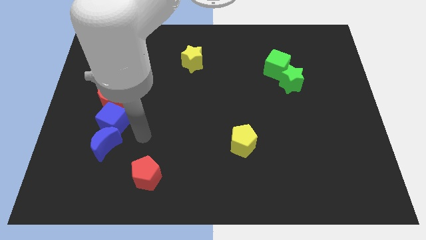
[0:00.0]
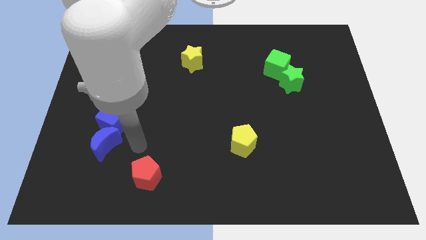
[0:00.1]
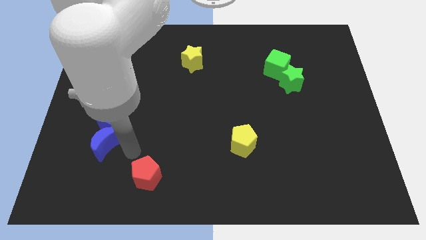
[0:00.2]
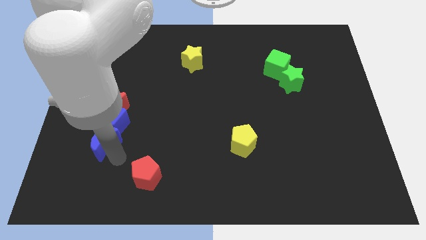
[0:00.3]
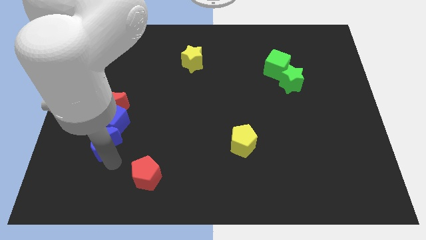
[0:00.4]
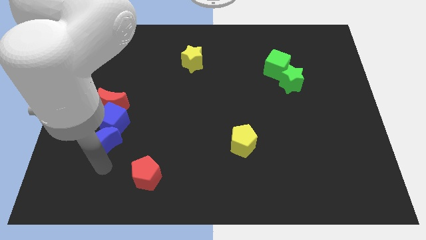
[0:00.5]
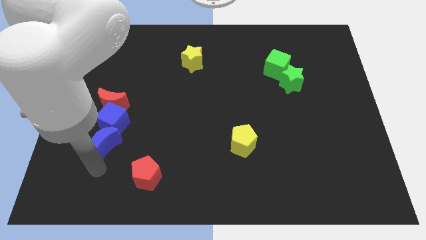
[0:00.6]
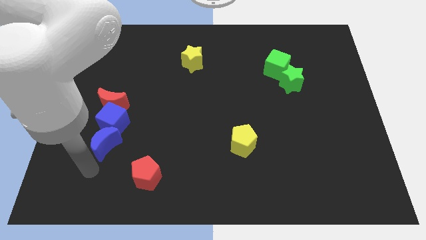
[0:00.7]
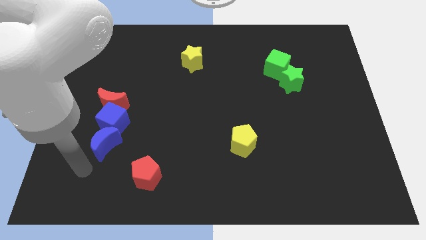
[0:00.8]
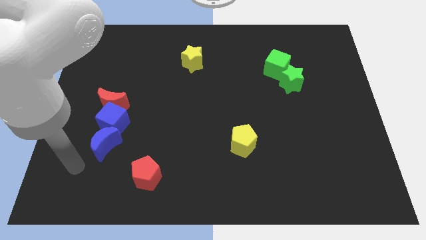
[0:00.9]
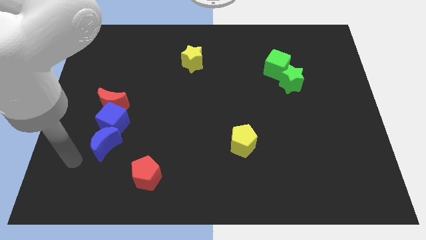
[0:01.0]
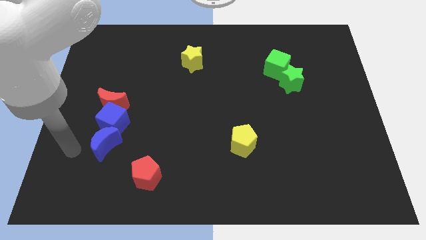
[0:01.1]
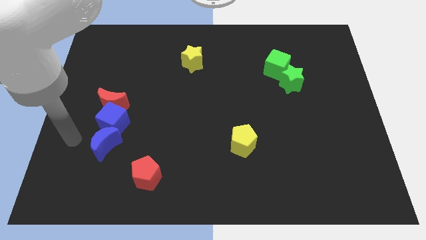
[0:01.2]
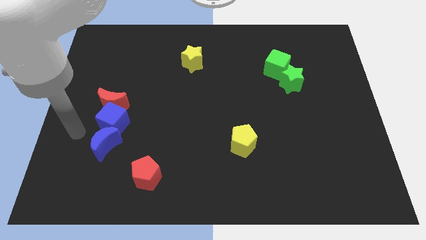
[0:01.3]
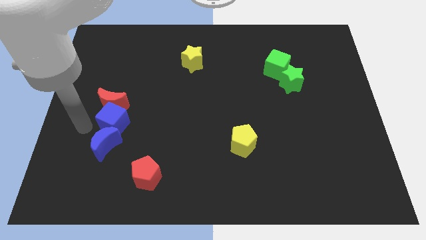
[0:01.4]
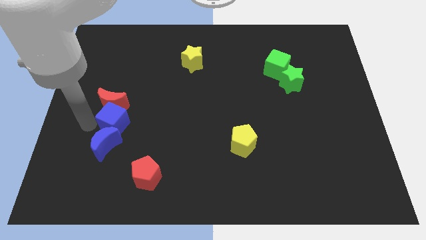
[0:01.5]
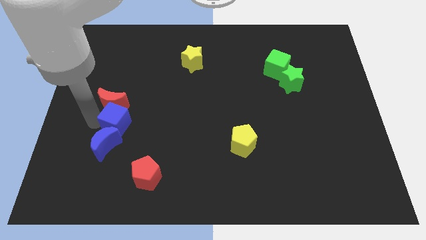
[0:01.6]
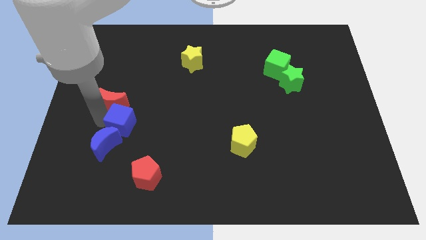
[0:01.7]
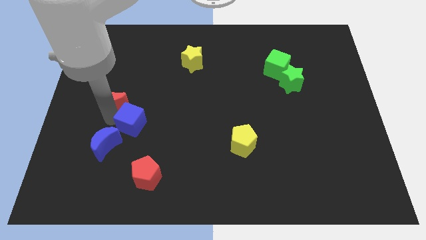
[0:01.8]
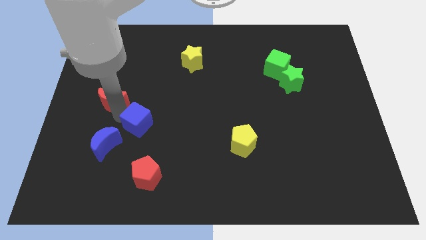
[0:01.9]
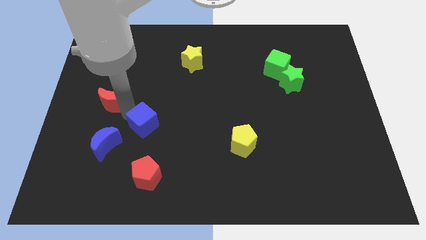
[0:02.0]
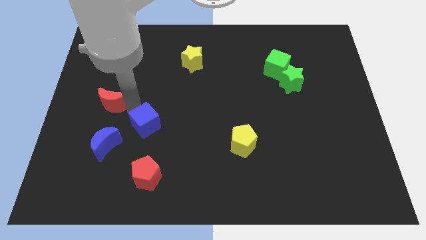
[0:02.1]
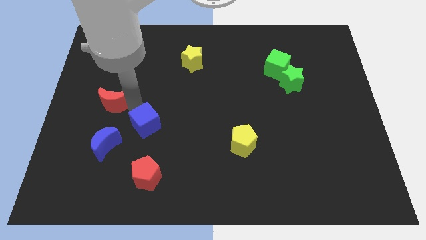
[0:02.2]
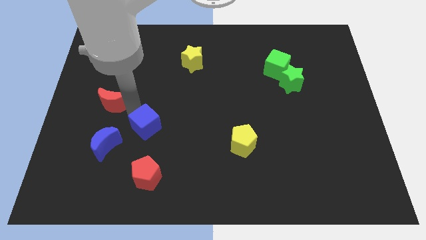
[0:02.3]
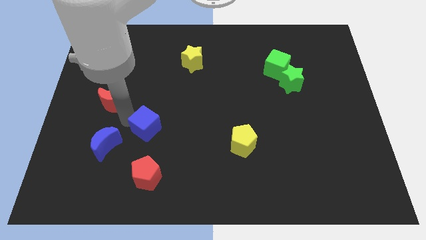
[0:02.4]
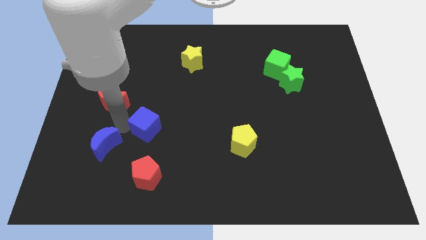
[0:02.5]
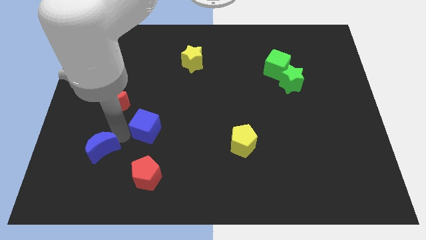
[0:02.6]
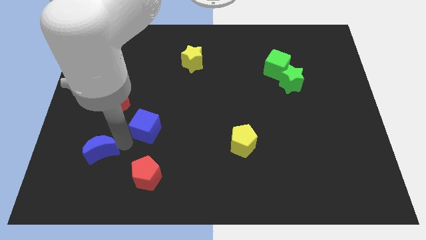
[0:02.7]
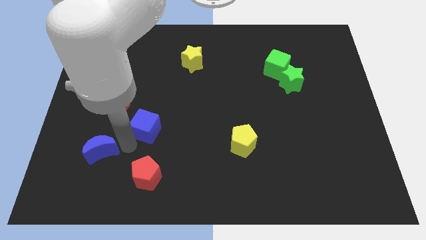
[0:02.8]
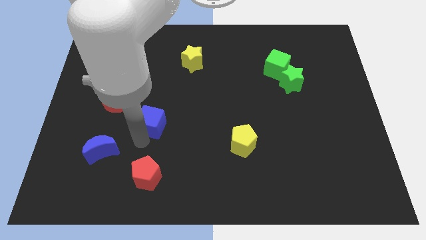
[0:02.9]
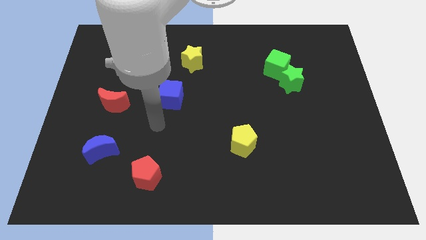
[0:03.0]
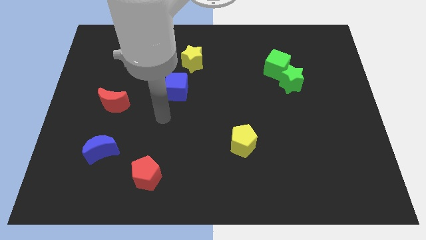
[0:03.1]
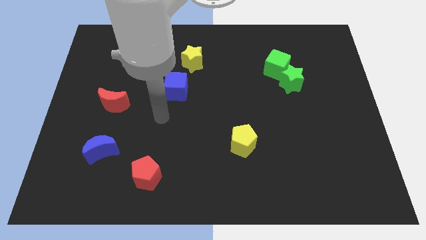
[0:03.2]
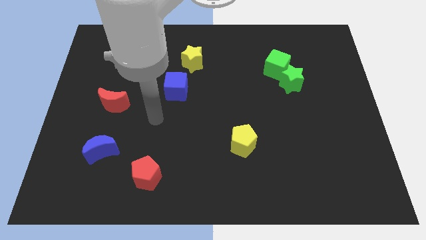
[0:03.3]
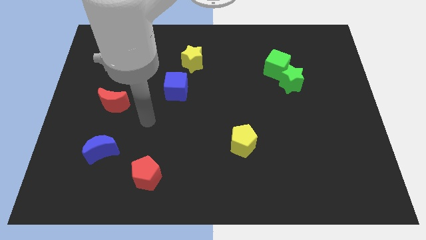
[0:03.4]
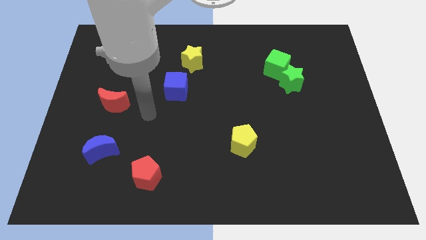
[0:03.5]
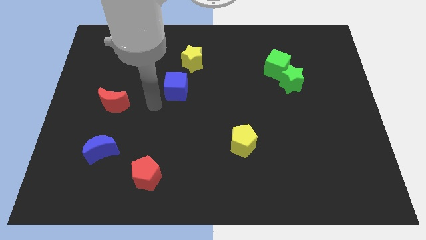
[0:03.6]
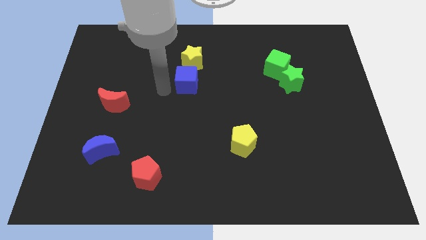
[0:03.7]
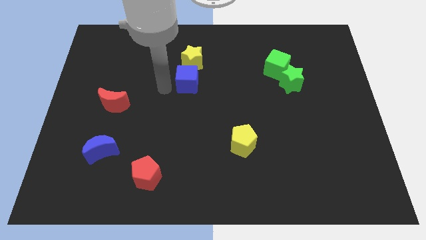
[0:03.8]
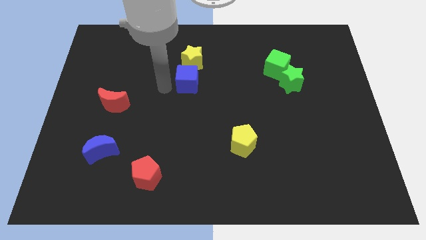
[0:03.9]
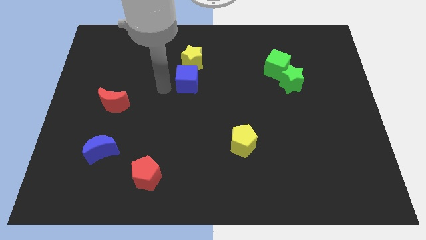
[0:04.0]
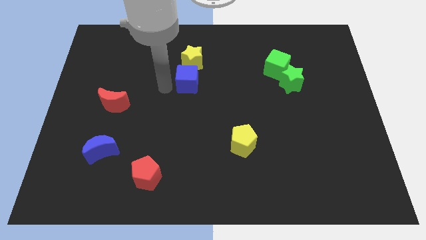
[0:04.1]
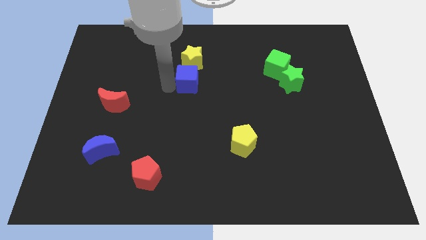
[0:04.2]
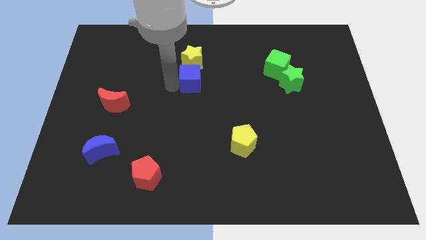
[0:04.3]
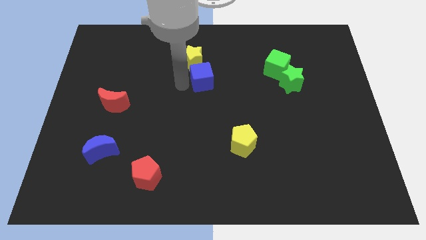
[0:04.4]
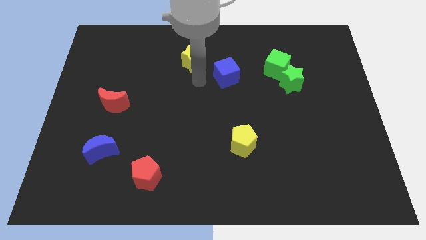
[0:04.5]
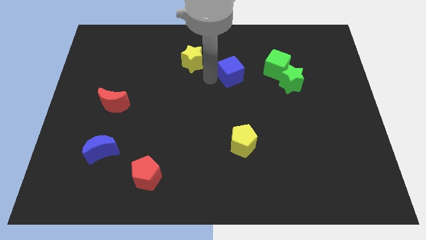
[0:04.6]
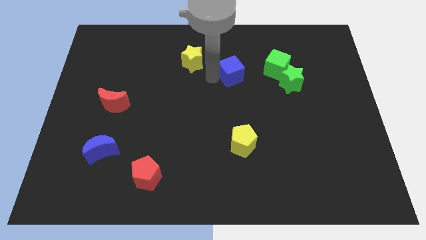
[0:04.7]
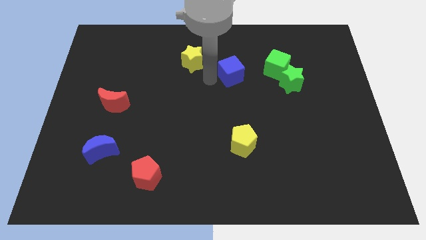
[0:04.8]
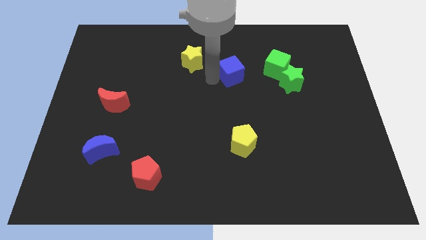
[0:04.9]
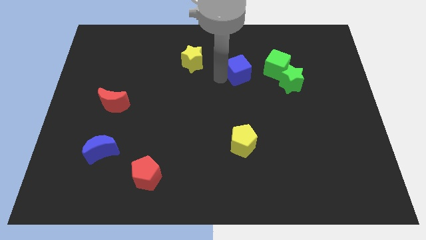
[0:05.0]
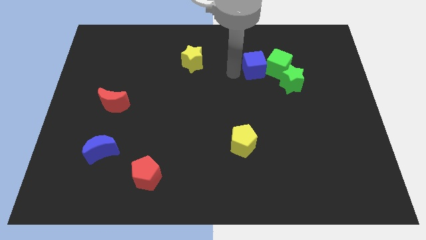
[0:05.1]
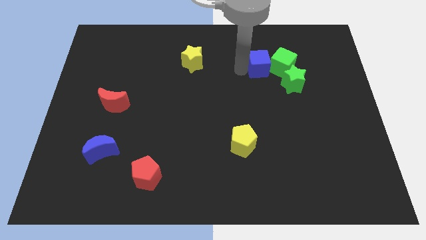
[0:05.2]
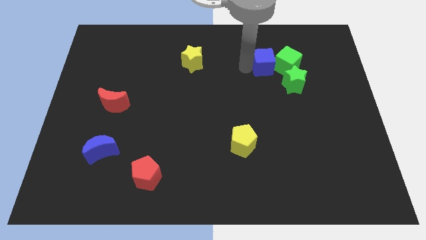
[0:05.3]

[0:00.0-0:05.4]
move the blue cube towards the green cube

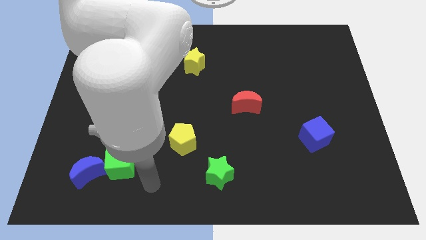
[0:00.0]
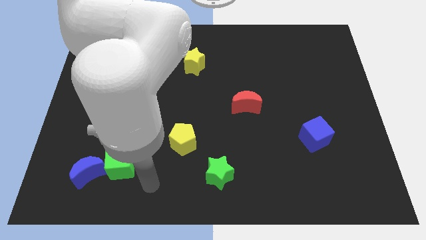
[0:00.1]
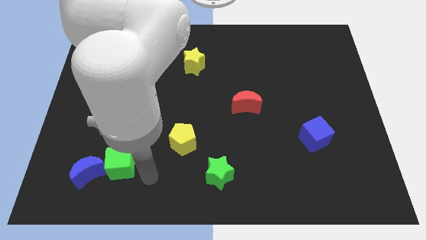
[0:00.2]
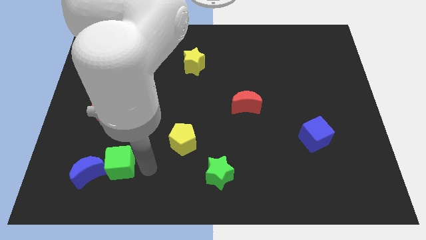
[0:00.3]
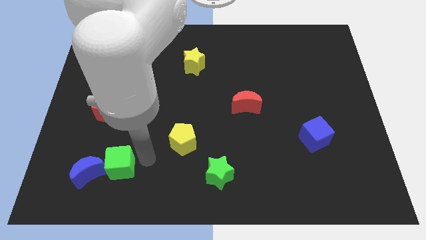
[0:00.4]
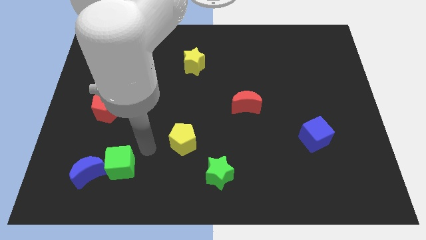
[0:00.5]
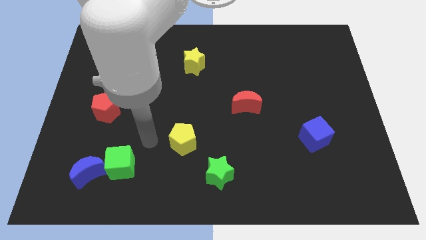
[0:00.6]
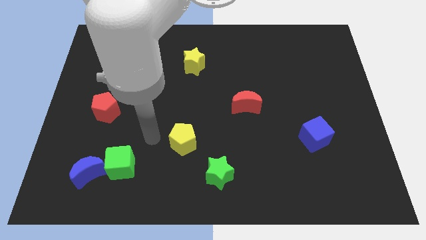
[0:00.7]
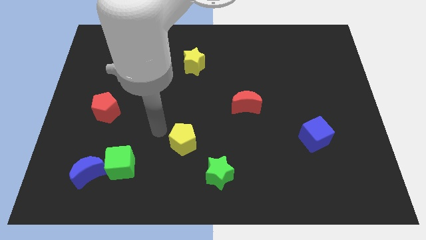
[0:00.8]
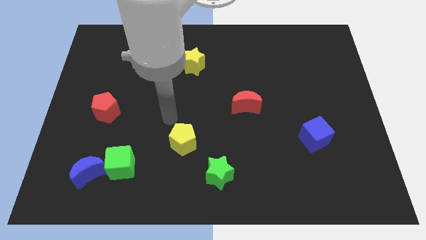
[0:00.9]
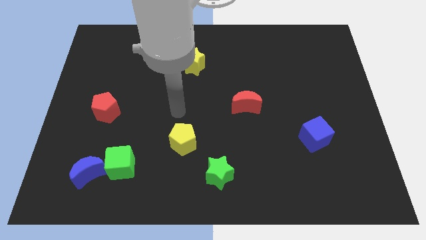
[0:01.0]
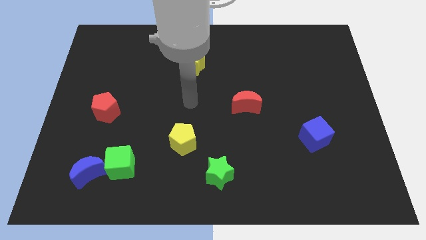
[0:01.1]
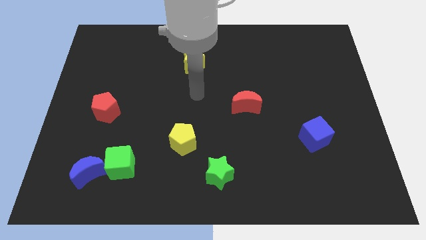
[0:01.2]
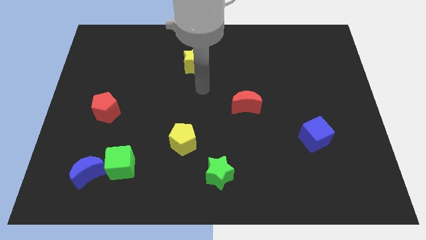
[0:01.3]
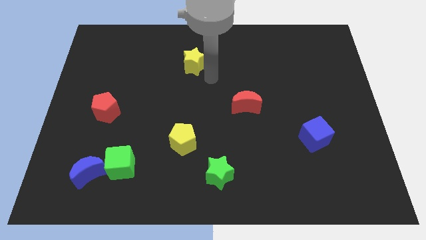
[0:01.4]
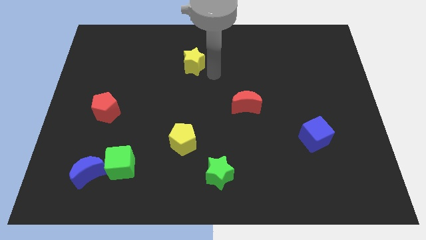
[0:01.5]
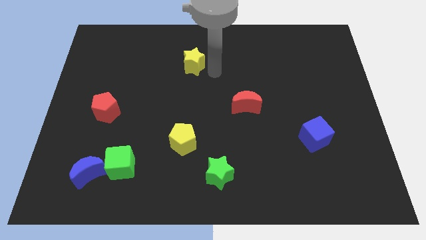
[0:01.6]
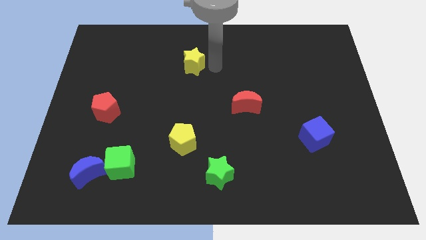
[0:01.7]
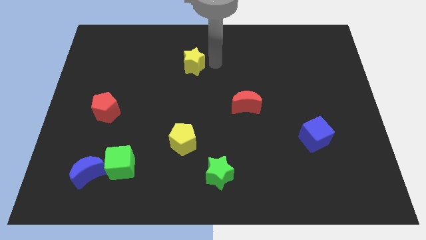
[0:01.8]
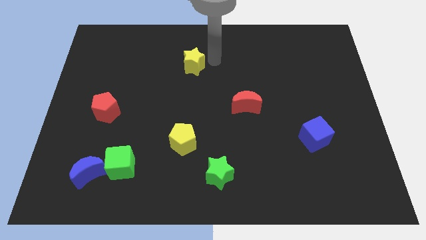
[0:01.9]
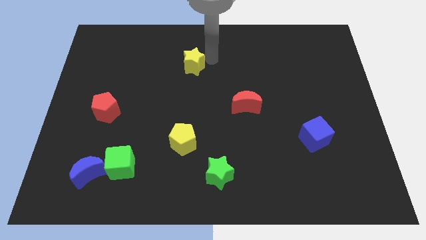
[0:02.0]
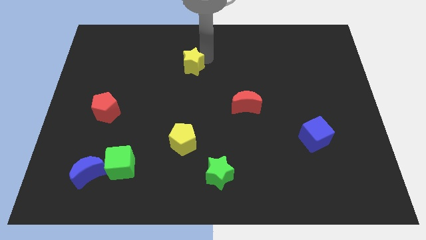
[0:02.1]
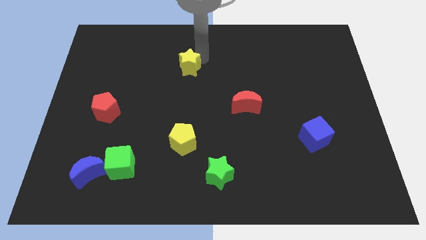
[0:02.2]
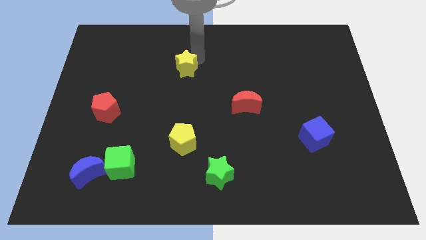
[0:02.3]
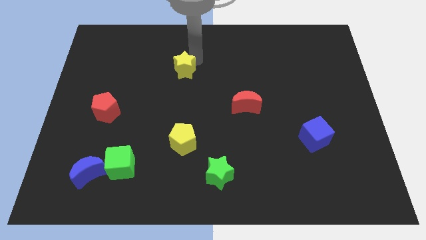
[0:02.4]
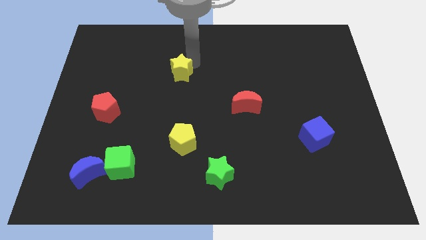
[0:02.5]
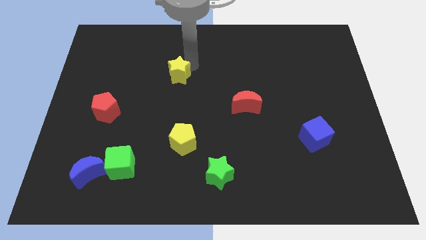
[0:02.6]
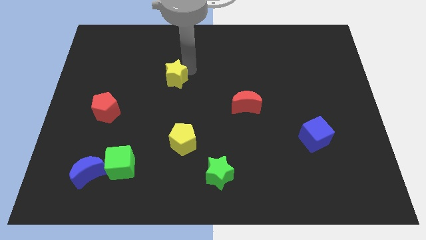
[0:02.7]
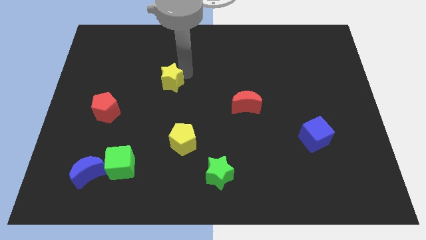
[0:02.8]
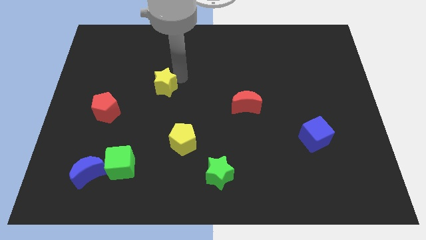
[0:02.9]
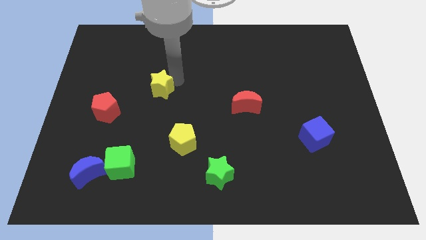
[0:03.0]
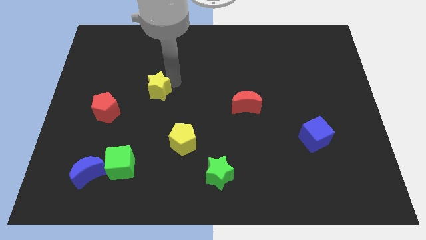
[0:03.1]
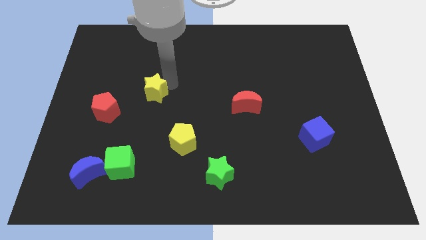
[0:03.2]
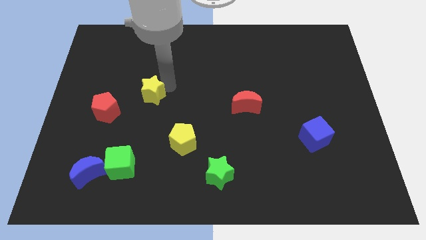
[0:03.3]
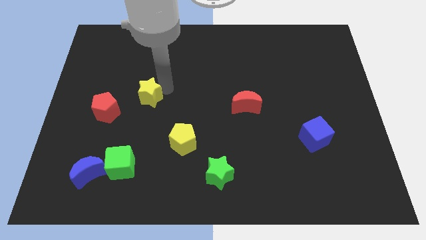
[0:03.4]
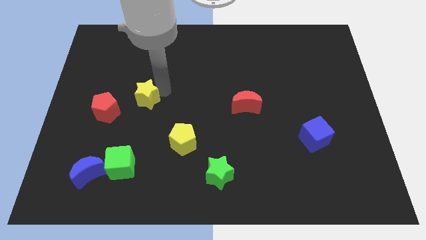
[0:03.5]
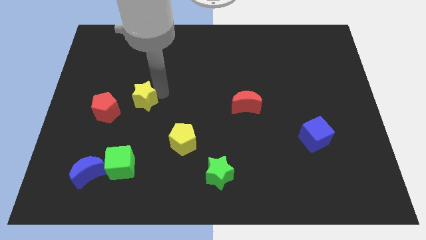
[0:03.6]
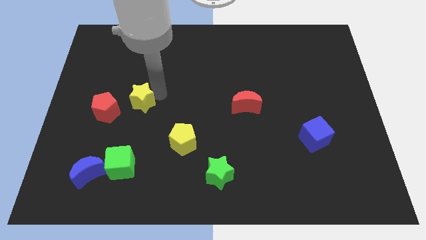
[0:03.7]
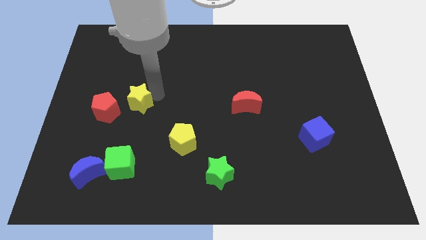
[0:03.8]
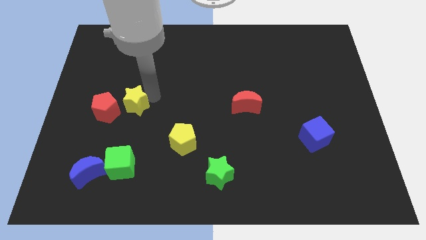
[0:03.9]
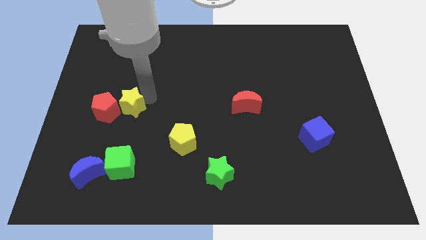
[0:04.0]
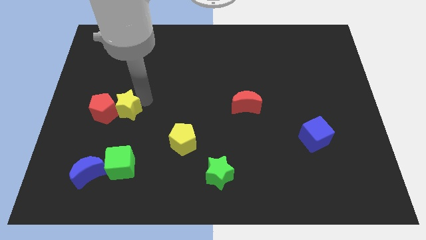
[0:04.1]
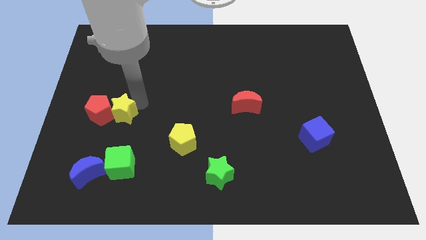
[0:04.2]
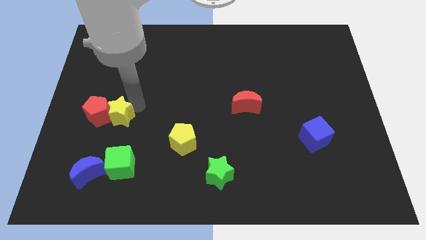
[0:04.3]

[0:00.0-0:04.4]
slide the yellow star towards the red pentagon
